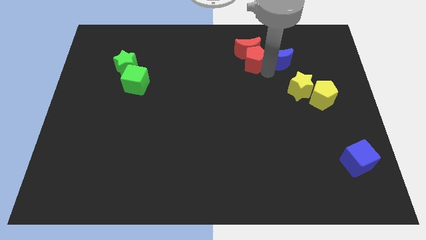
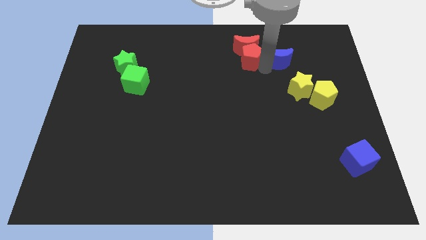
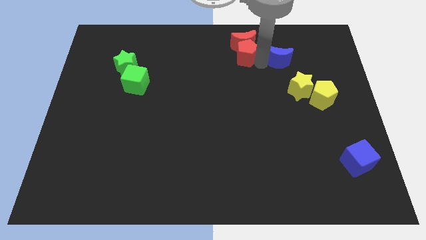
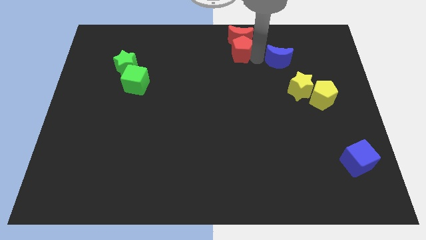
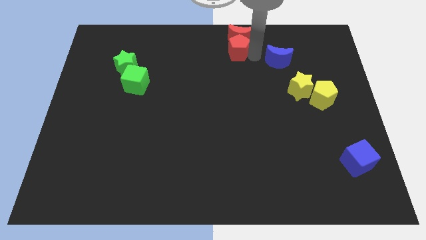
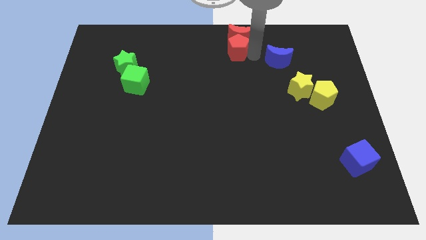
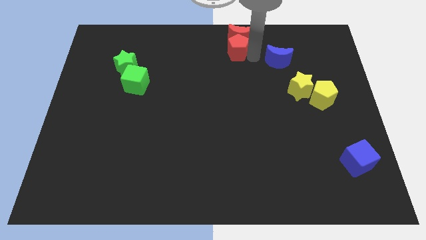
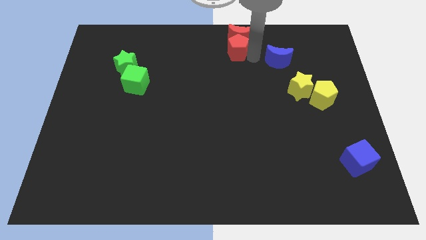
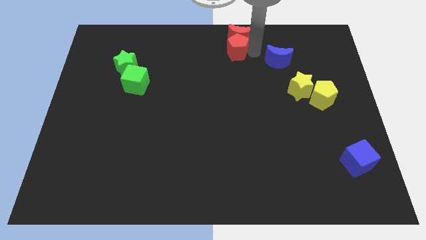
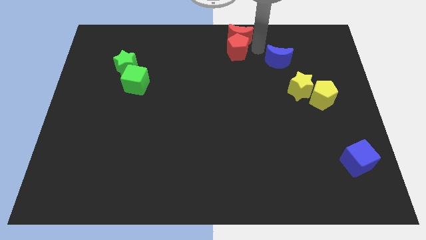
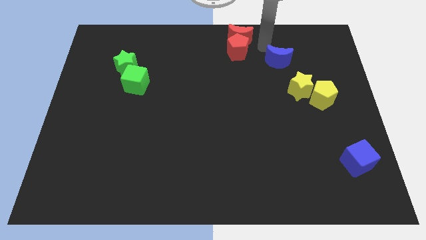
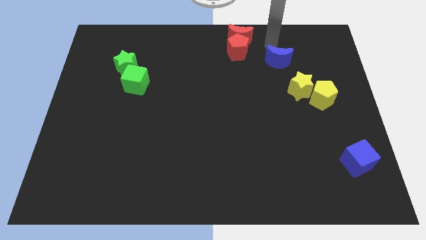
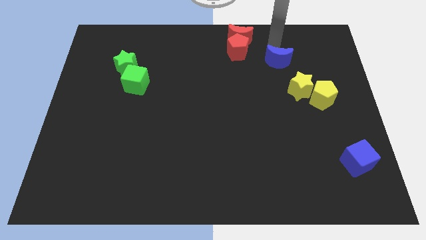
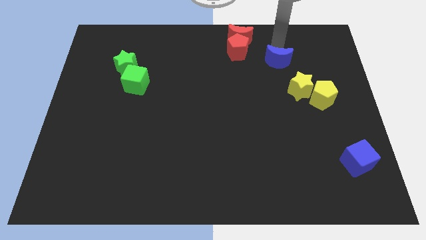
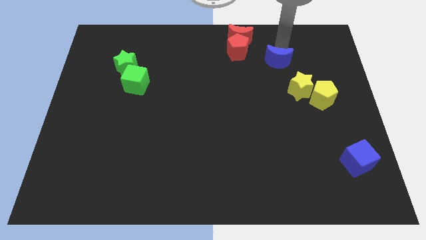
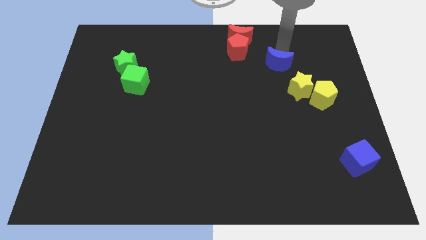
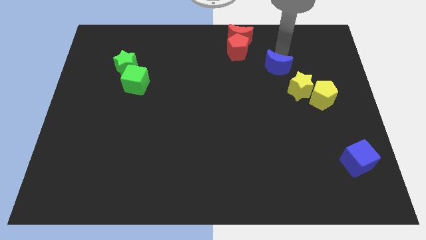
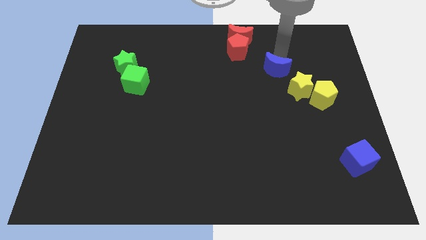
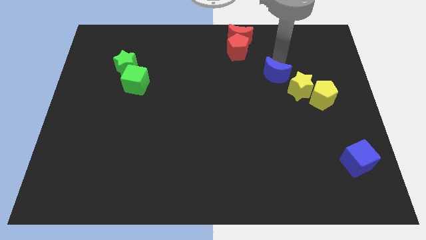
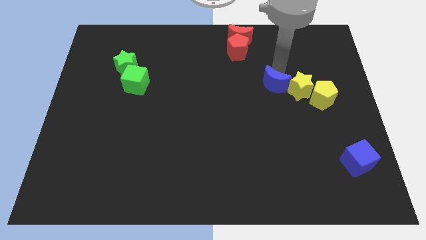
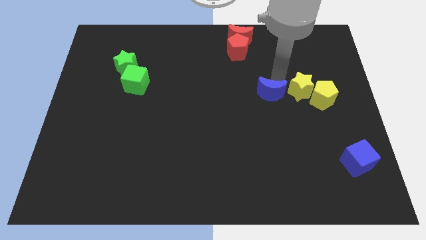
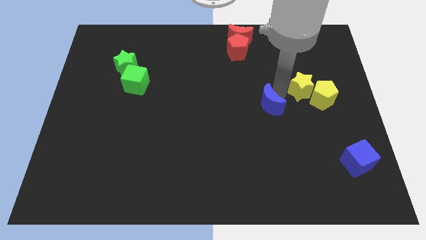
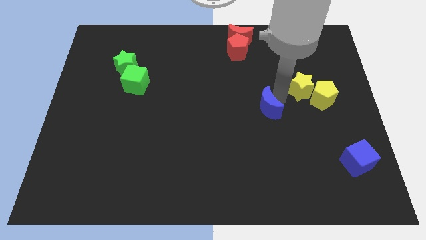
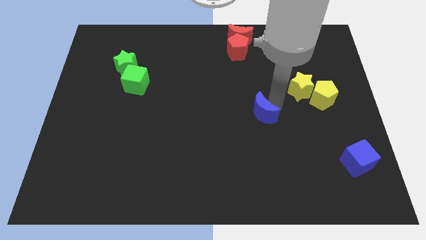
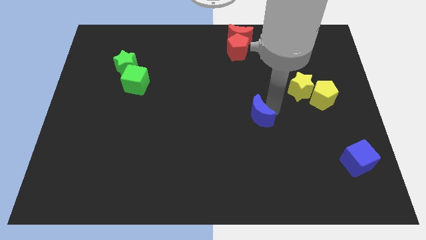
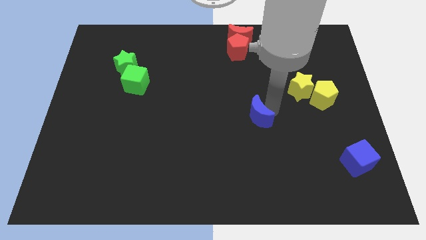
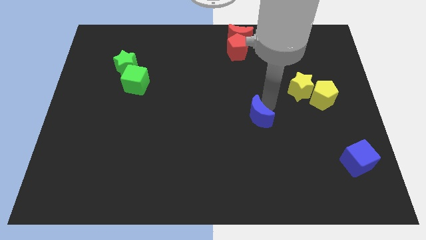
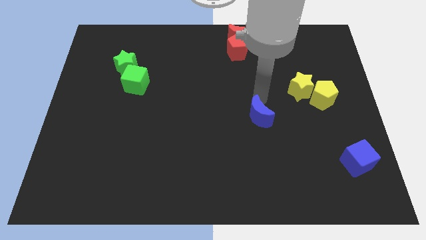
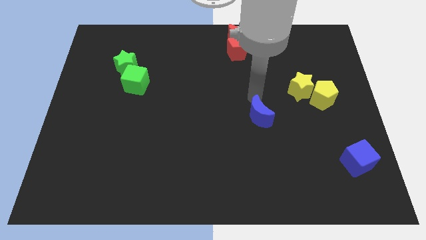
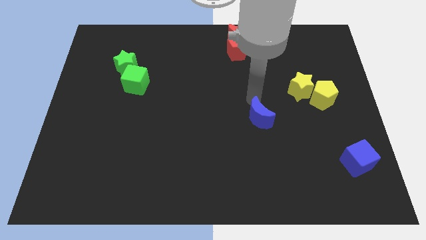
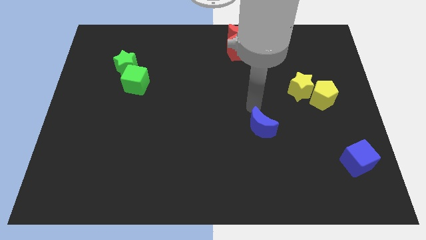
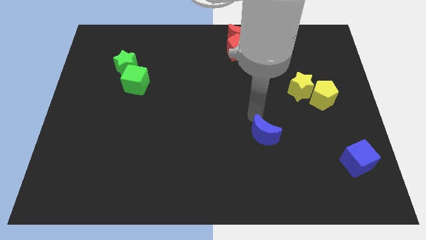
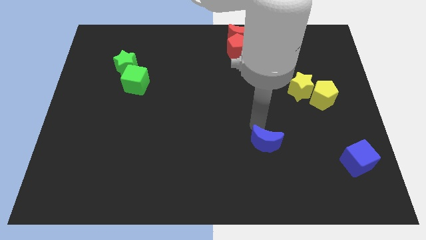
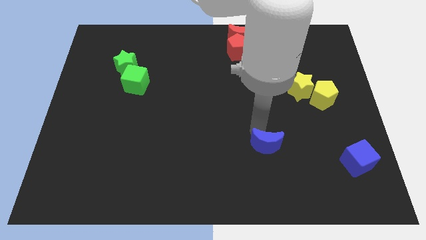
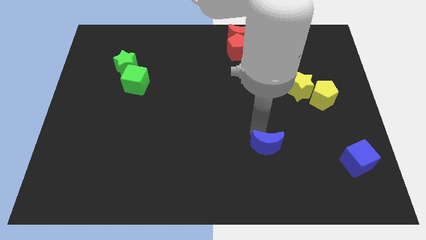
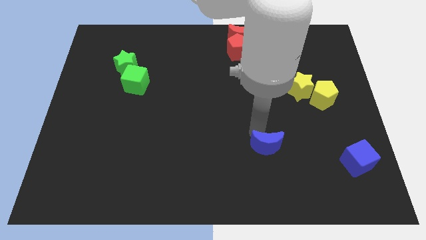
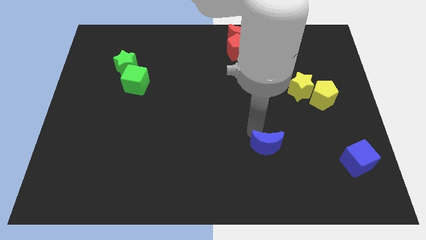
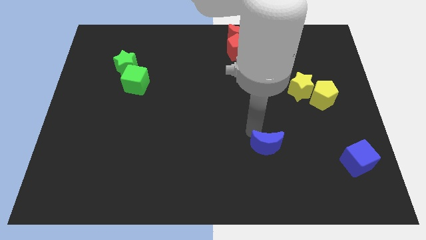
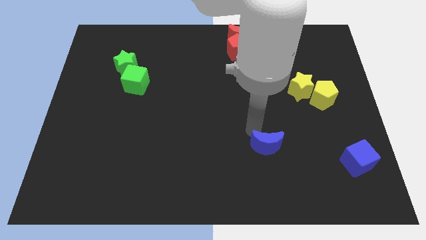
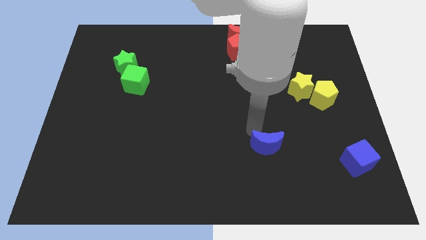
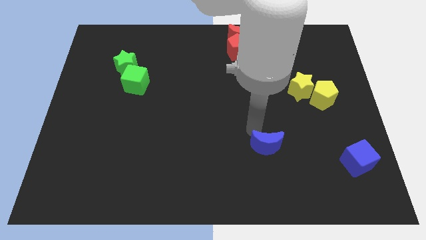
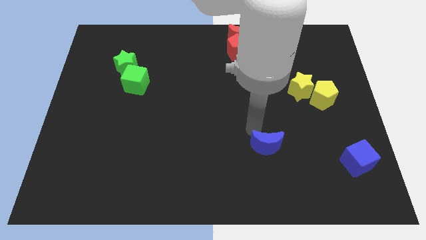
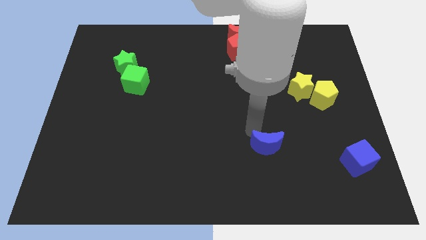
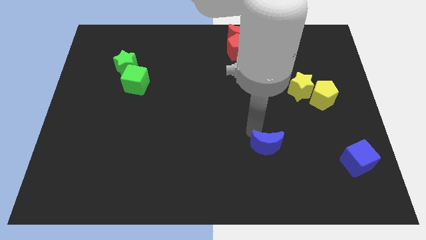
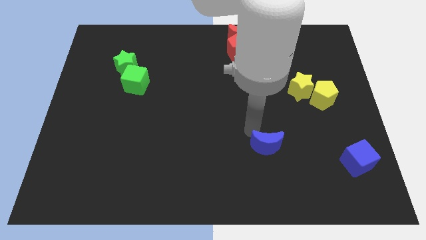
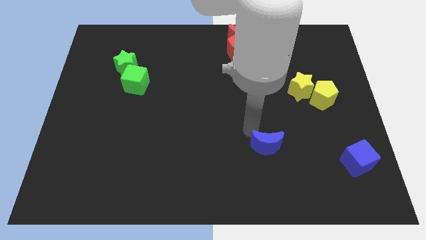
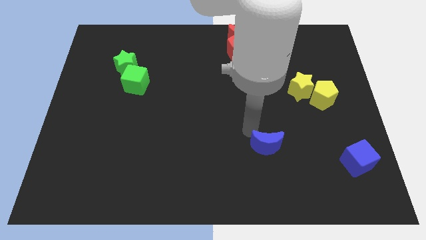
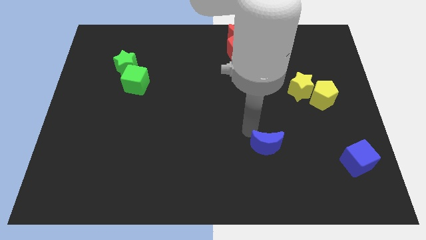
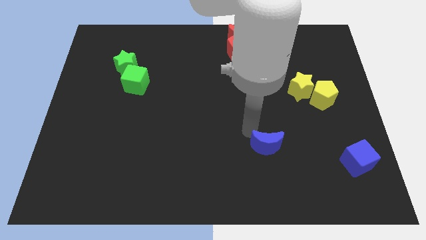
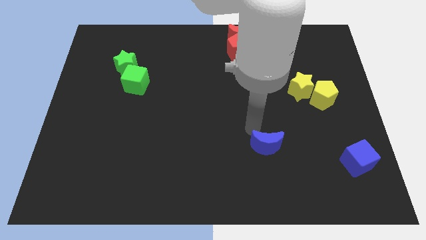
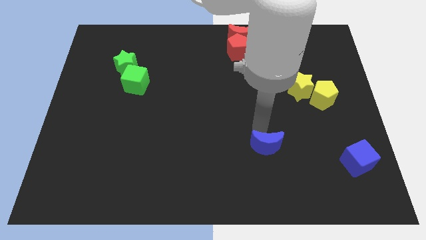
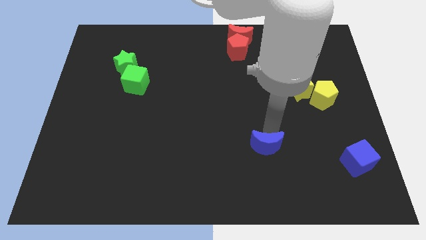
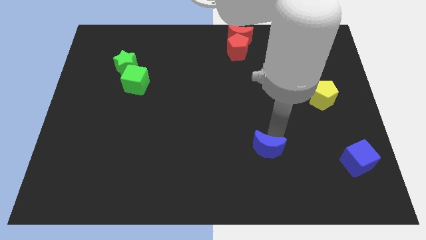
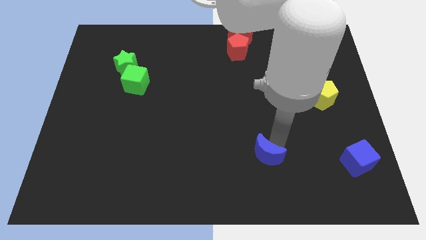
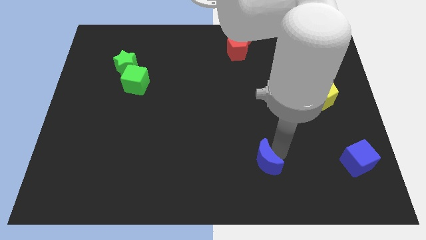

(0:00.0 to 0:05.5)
place the blue moon to the left of blue cube

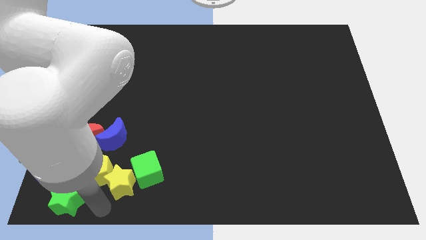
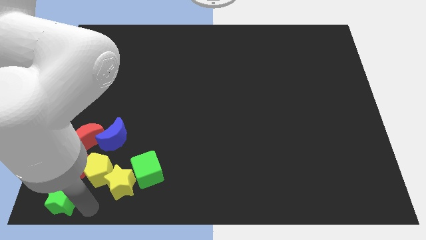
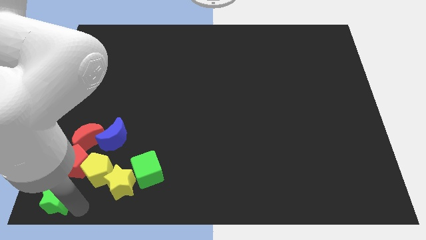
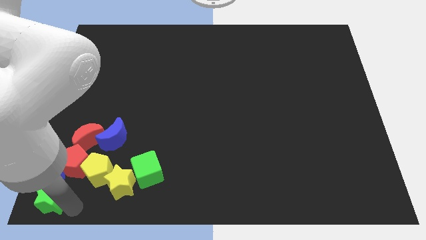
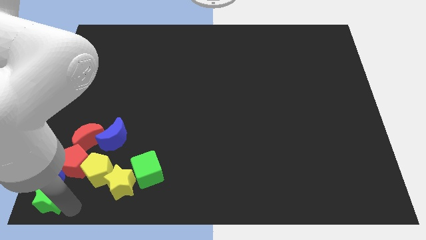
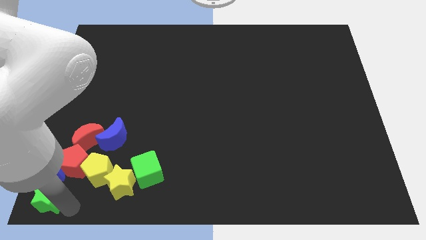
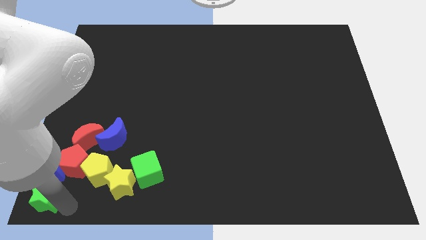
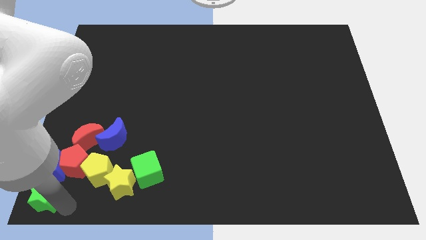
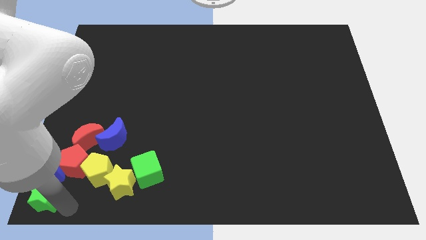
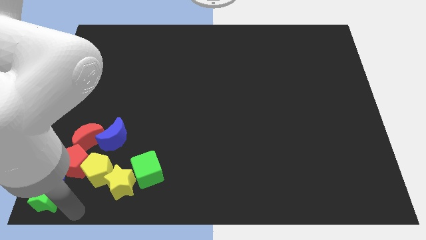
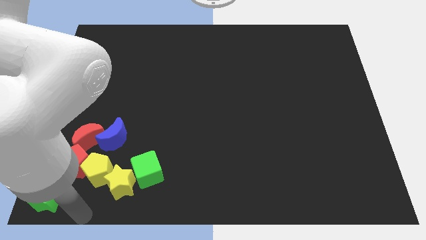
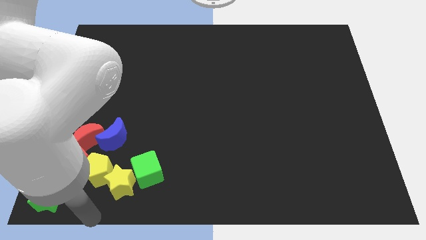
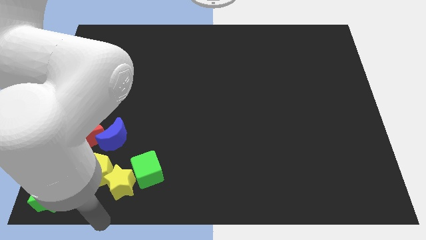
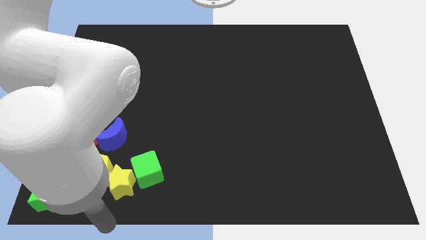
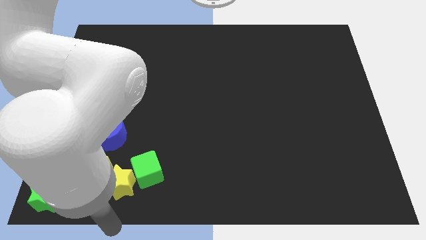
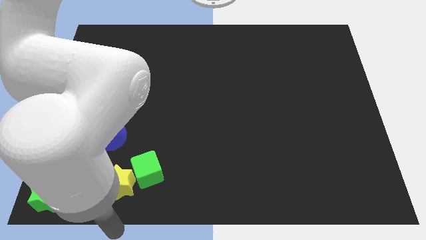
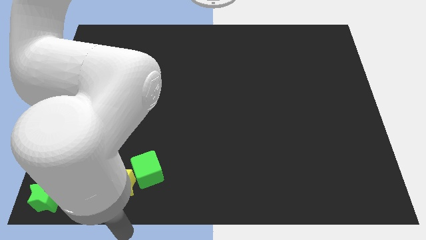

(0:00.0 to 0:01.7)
slide the green star to the bottom left corner

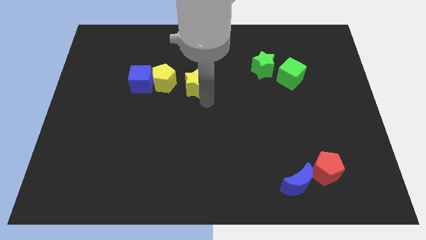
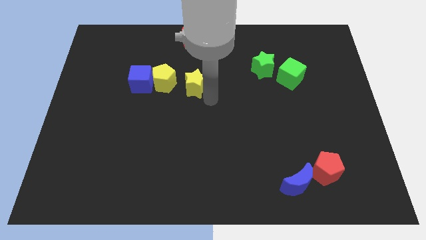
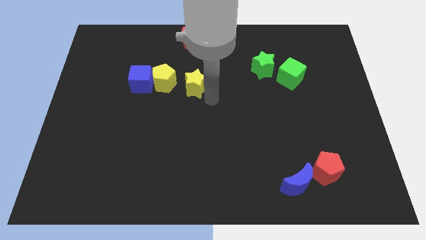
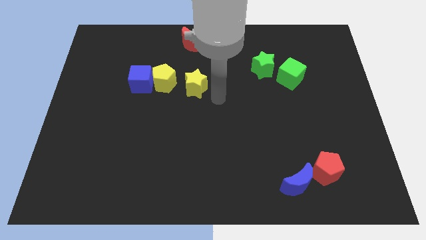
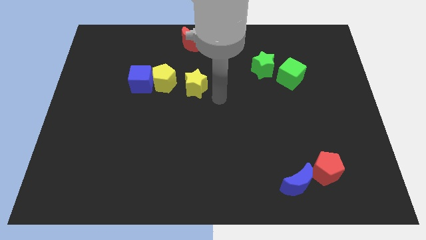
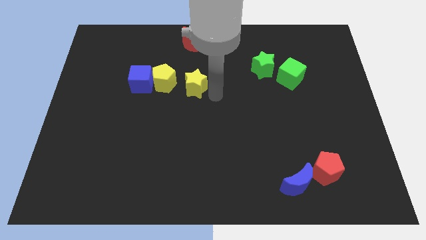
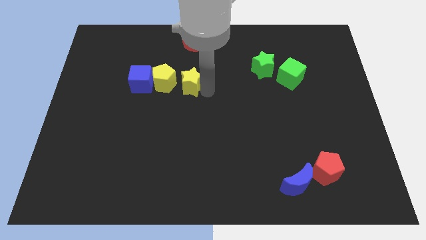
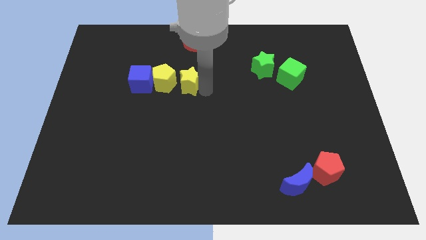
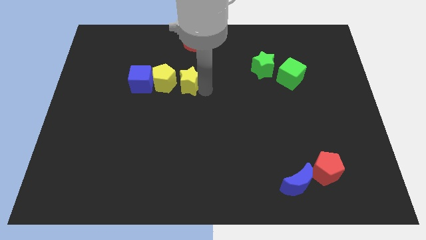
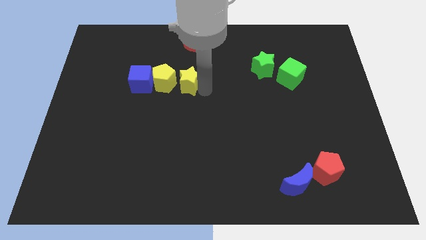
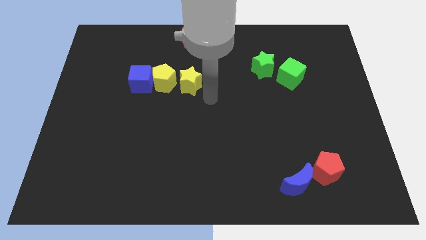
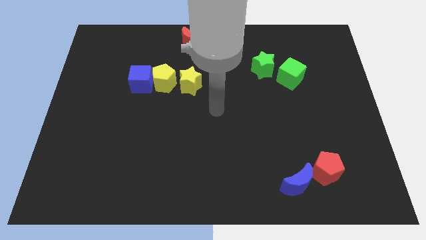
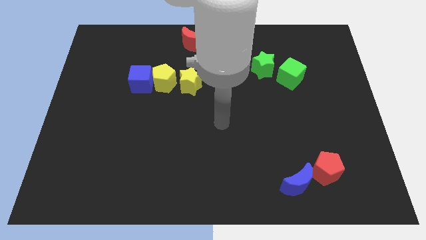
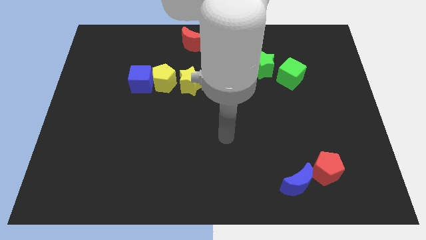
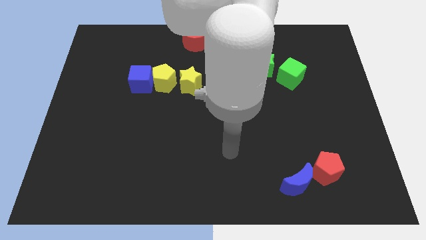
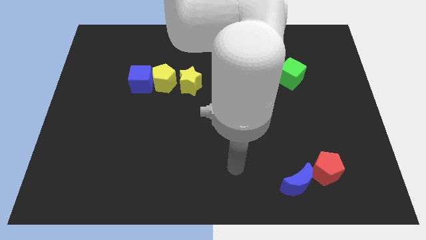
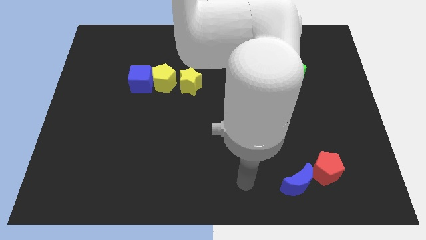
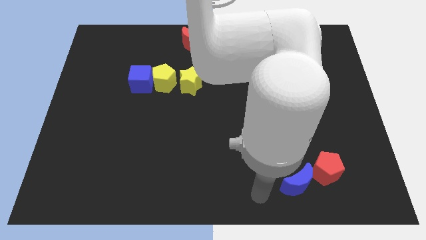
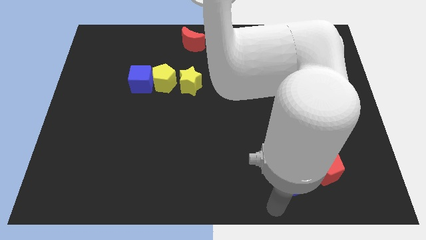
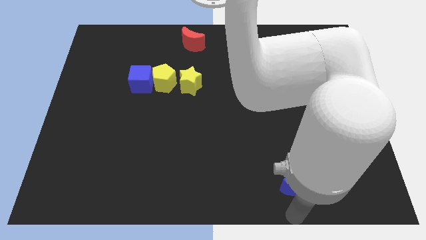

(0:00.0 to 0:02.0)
move the arm towards the blue crescent
